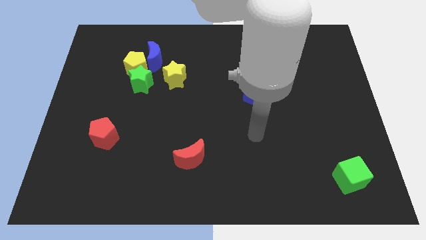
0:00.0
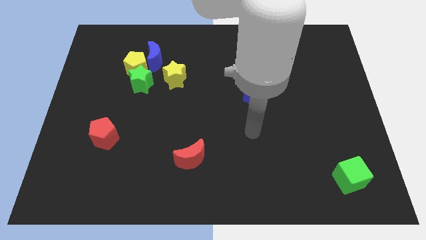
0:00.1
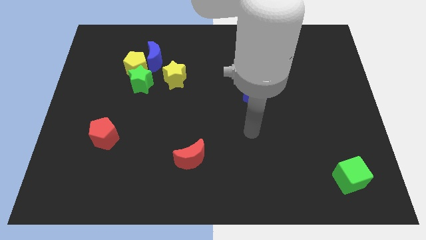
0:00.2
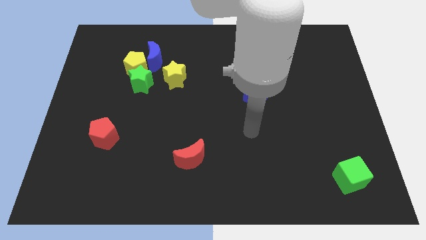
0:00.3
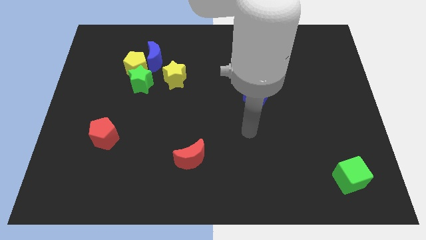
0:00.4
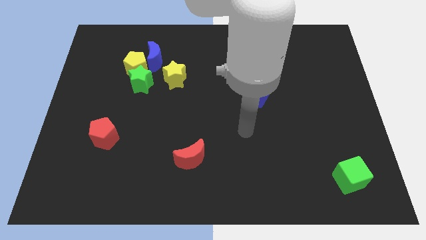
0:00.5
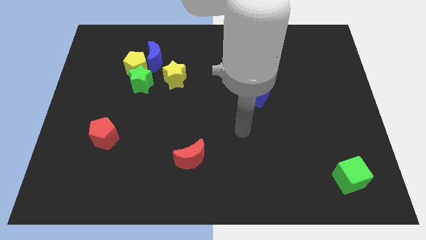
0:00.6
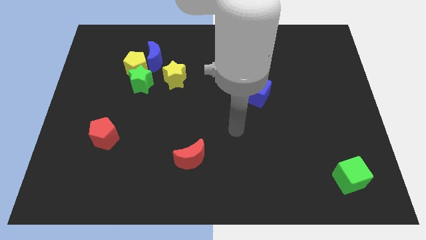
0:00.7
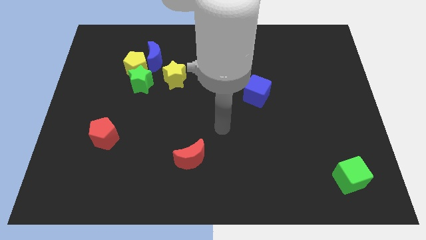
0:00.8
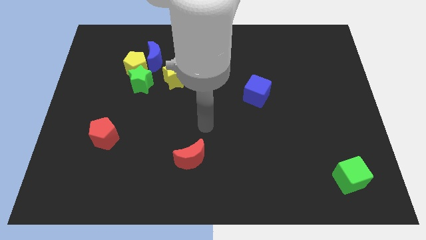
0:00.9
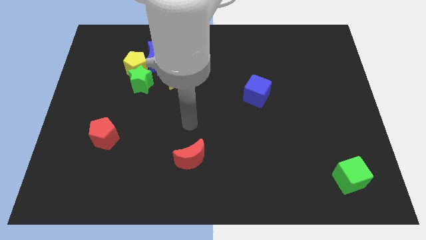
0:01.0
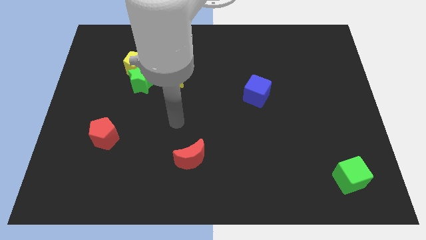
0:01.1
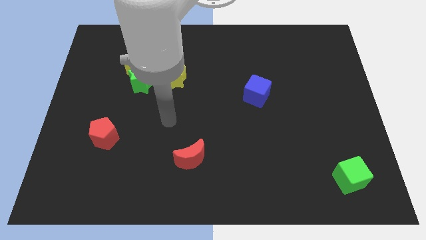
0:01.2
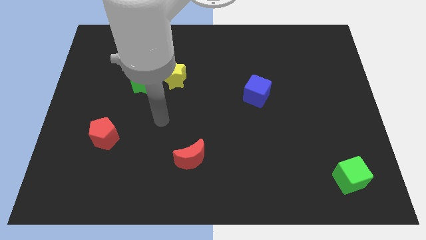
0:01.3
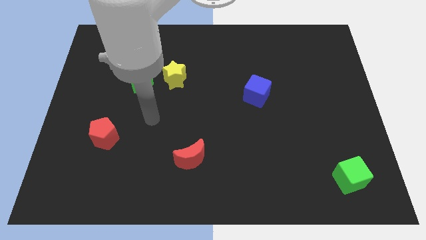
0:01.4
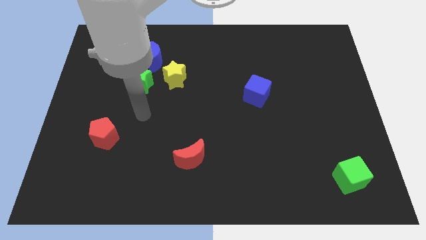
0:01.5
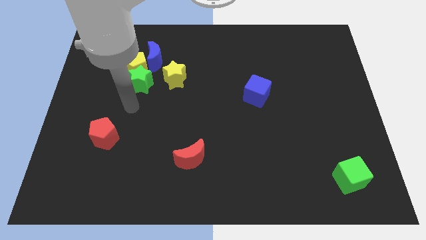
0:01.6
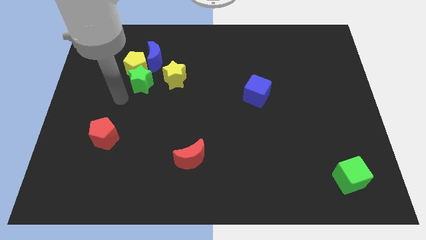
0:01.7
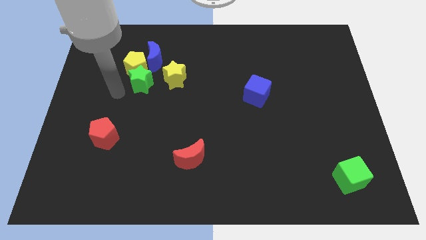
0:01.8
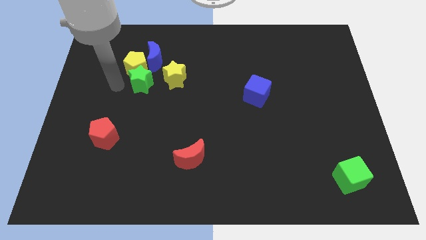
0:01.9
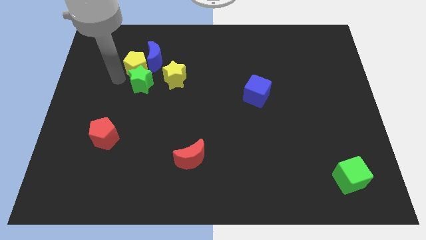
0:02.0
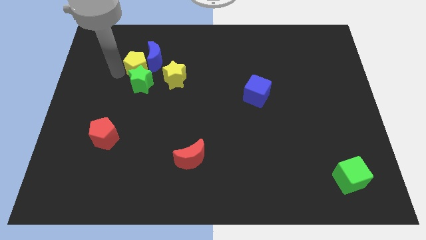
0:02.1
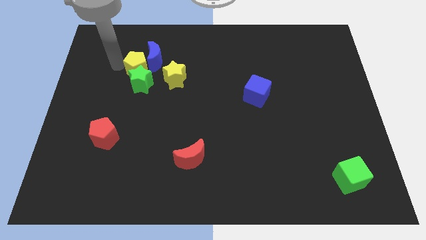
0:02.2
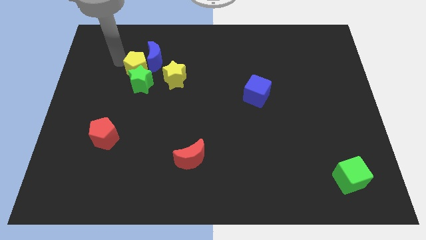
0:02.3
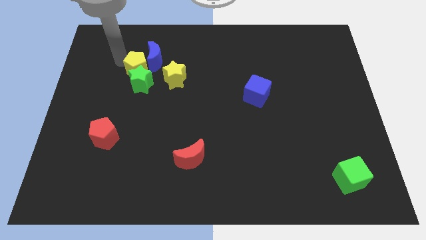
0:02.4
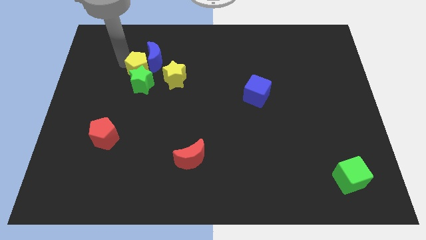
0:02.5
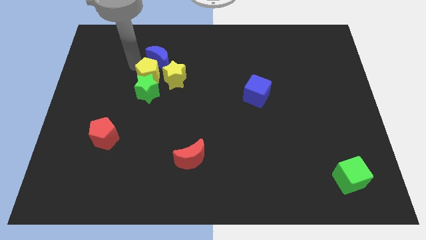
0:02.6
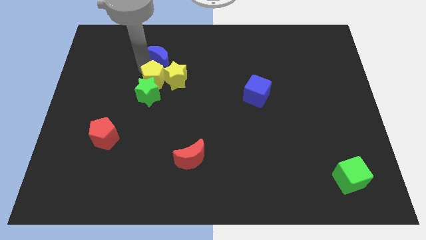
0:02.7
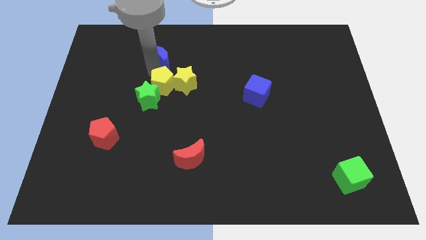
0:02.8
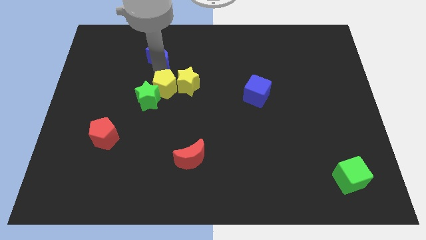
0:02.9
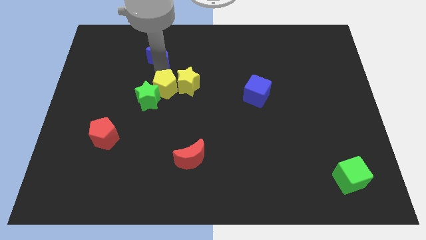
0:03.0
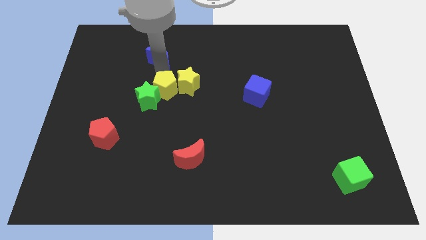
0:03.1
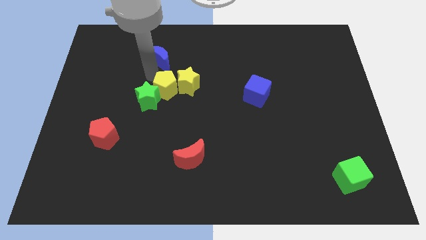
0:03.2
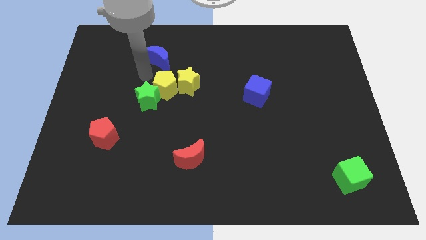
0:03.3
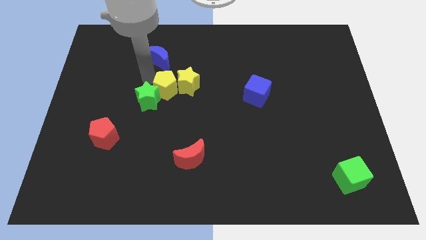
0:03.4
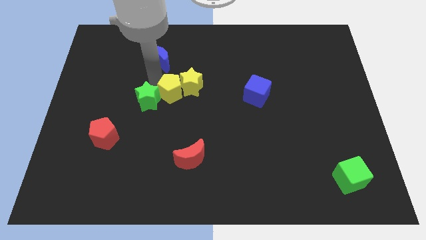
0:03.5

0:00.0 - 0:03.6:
place the yellow pentagon in between yellow star and green star

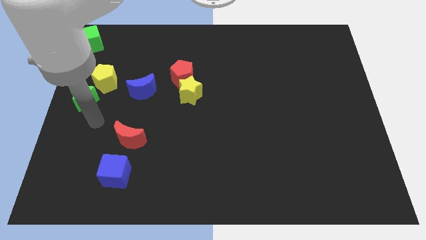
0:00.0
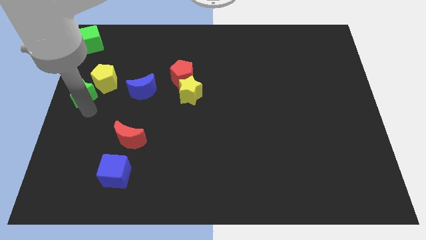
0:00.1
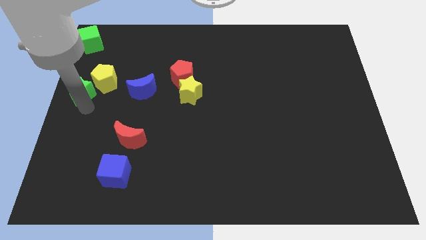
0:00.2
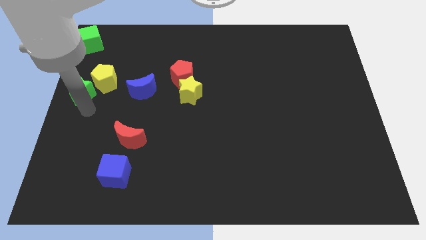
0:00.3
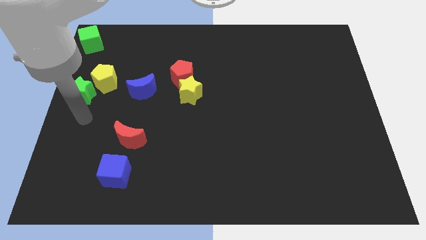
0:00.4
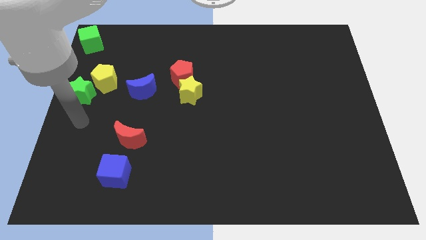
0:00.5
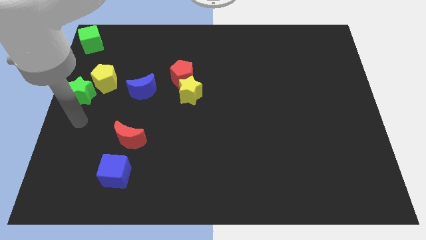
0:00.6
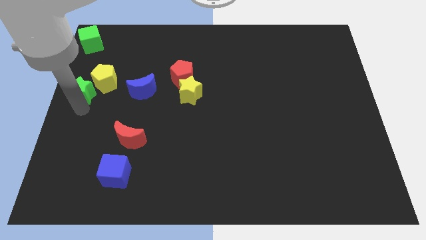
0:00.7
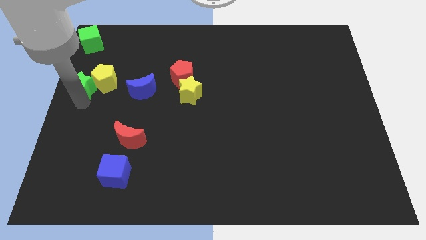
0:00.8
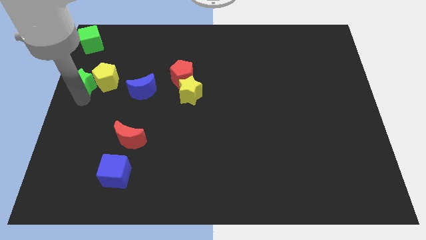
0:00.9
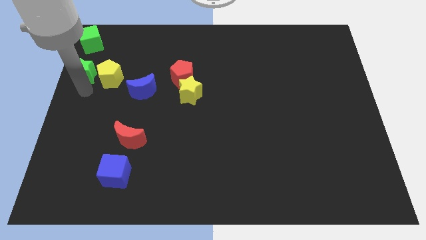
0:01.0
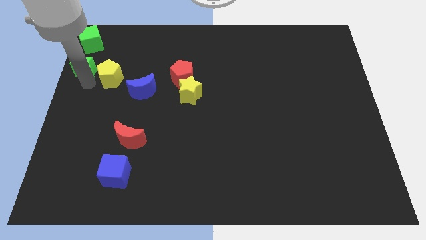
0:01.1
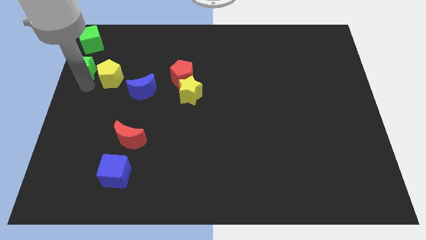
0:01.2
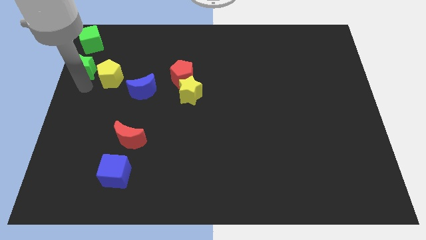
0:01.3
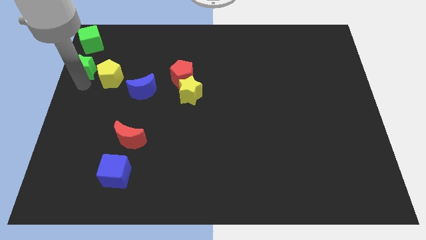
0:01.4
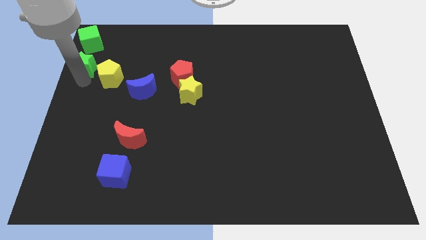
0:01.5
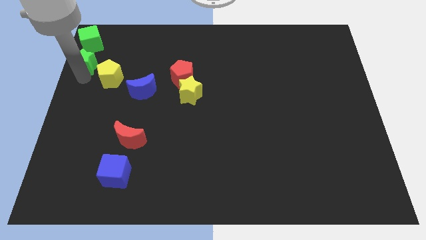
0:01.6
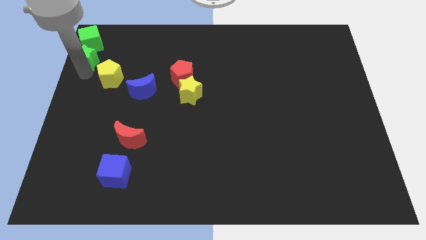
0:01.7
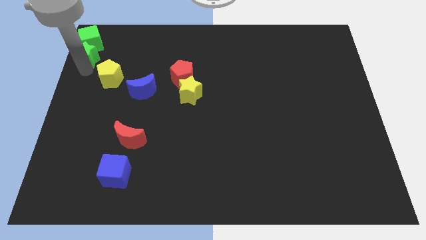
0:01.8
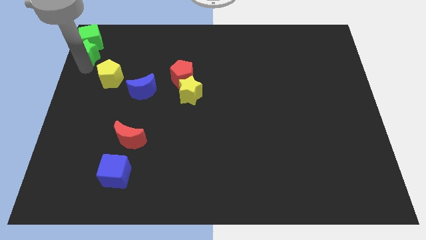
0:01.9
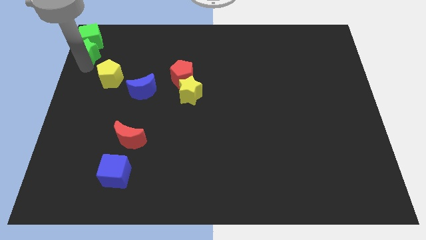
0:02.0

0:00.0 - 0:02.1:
place the green star at the bottom of the green cube

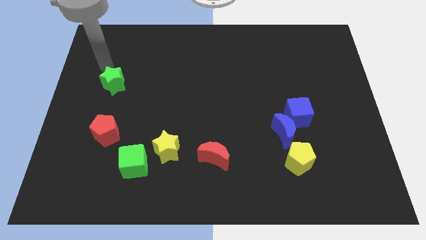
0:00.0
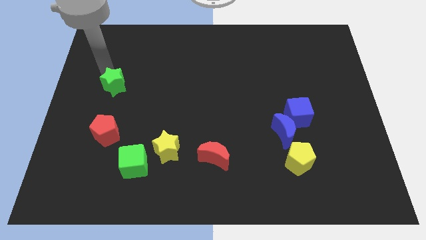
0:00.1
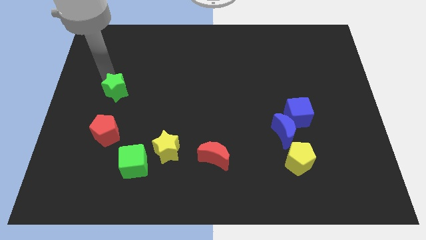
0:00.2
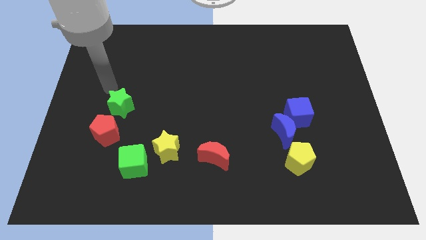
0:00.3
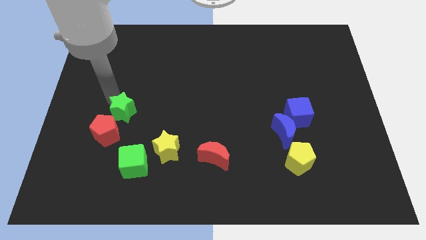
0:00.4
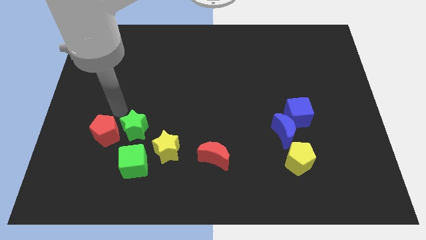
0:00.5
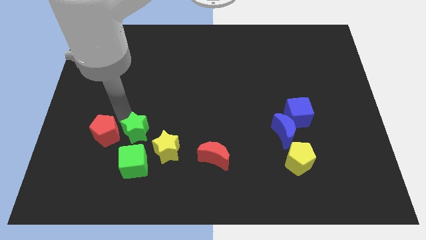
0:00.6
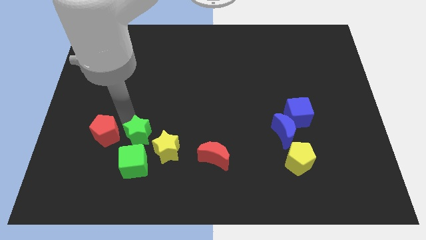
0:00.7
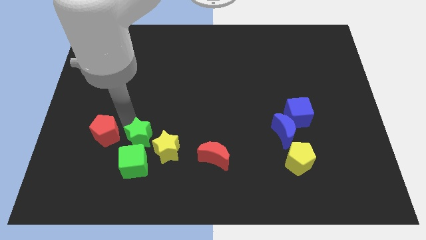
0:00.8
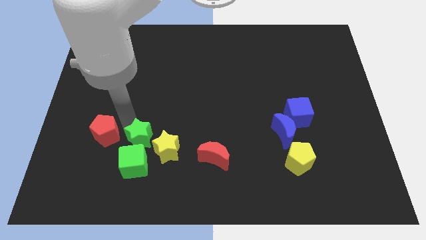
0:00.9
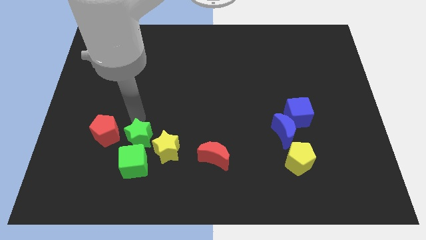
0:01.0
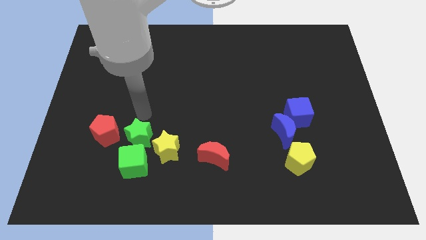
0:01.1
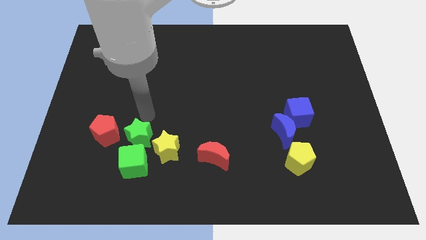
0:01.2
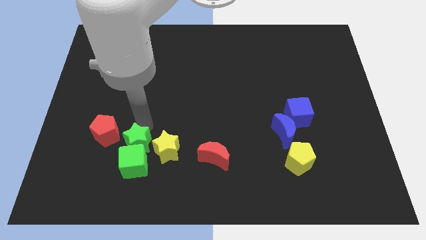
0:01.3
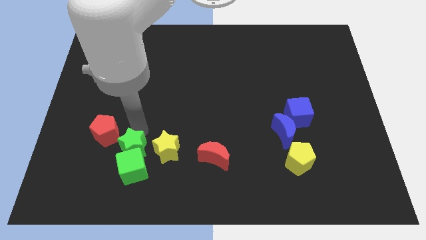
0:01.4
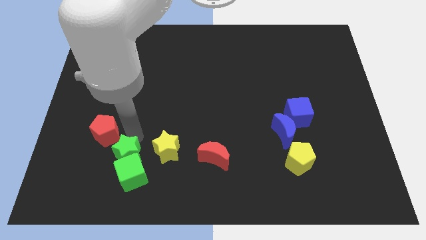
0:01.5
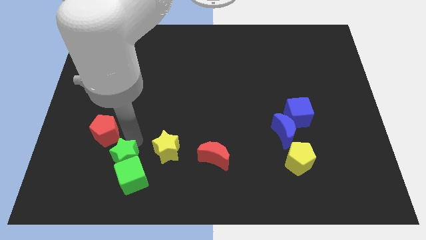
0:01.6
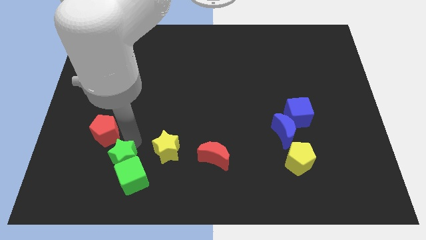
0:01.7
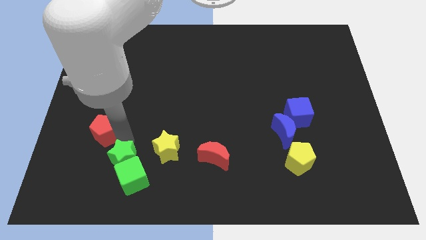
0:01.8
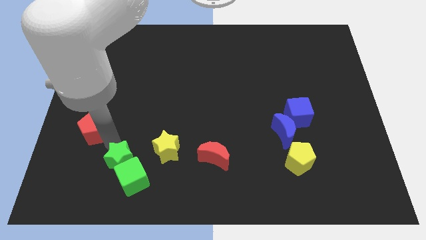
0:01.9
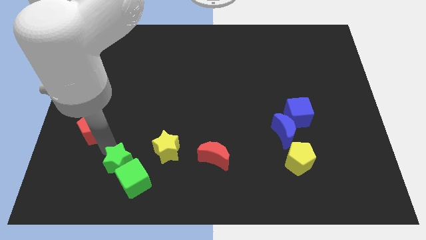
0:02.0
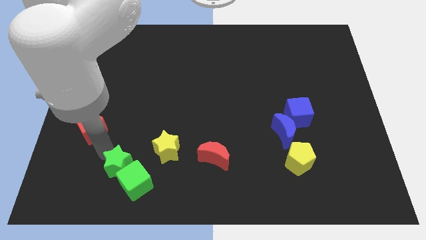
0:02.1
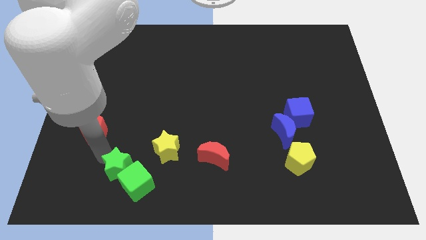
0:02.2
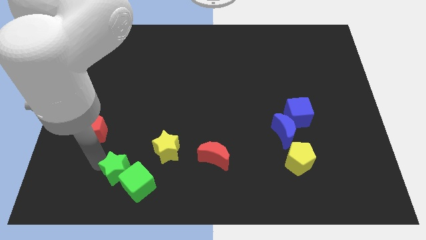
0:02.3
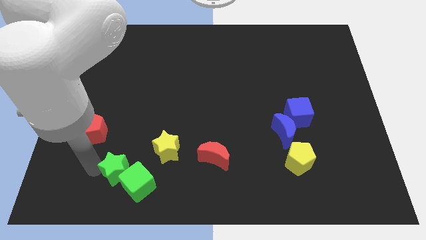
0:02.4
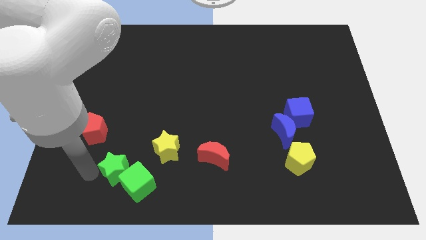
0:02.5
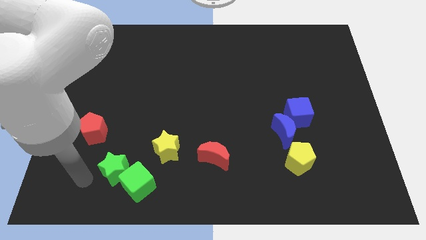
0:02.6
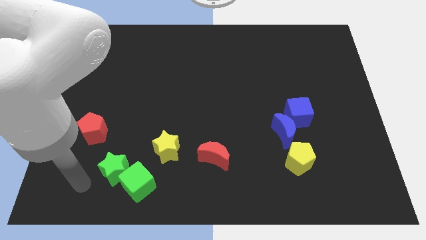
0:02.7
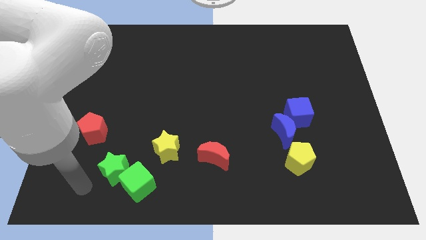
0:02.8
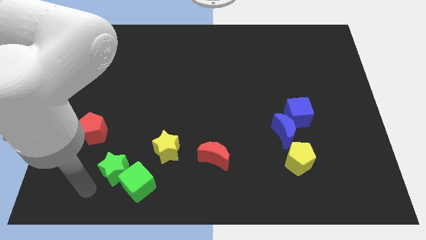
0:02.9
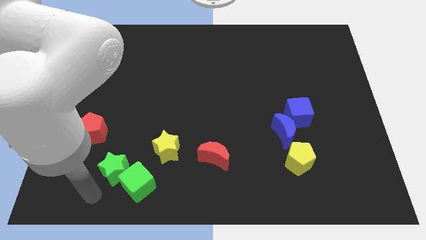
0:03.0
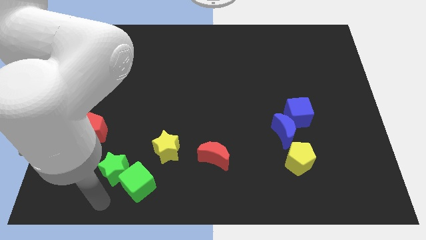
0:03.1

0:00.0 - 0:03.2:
place the green star to the left of green cube
